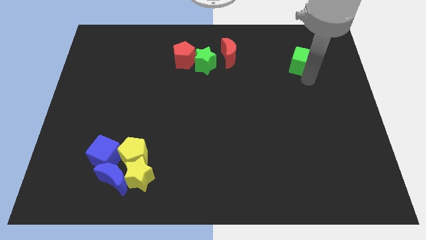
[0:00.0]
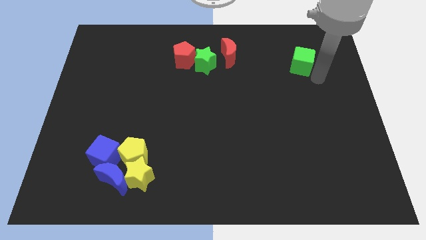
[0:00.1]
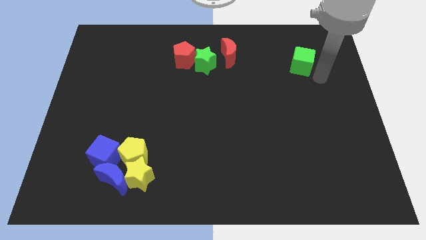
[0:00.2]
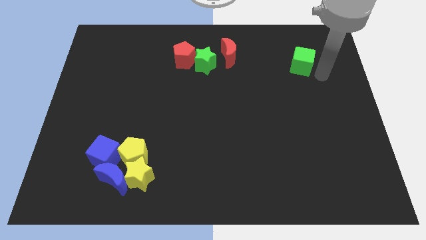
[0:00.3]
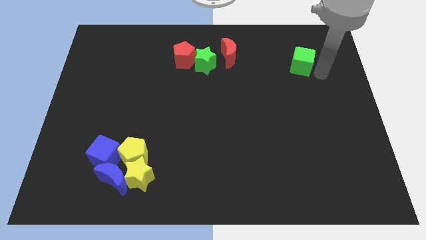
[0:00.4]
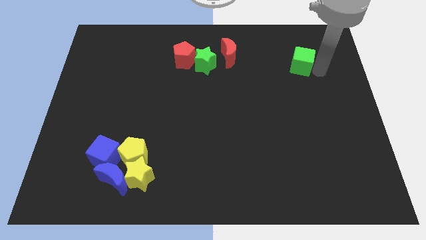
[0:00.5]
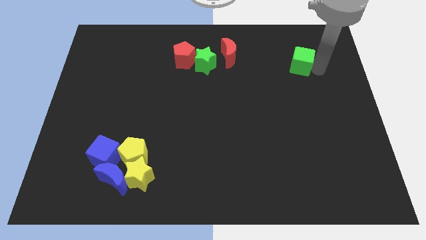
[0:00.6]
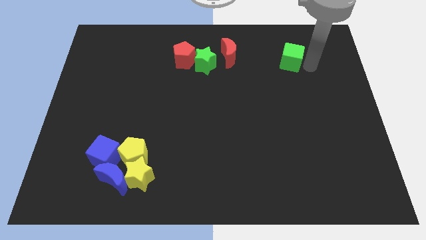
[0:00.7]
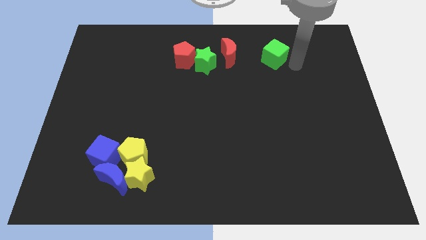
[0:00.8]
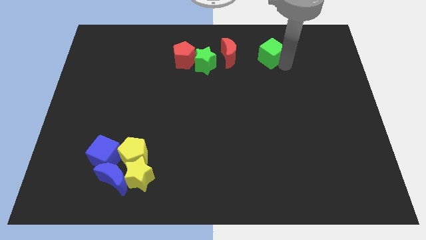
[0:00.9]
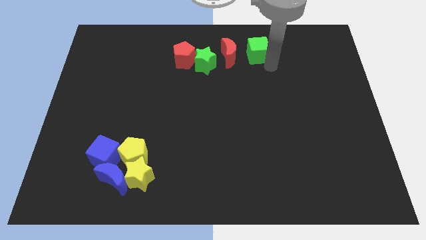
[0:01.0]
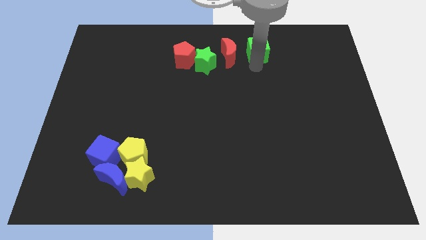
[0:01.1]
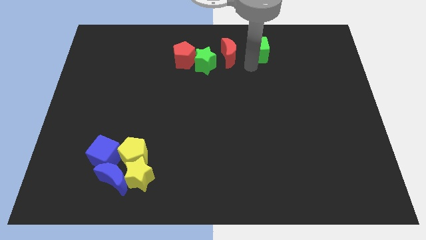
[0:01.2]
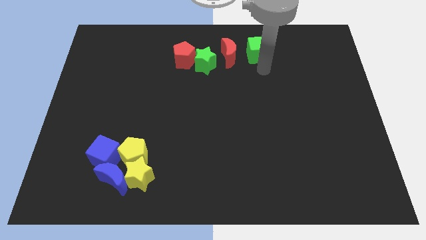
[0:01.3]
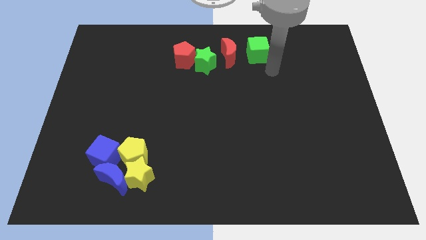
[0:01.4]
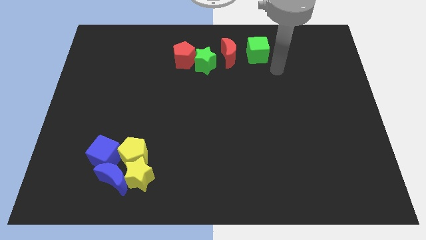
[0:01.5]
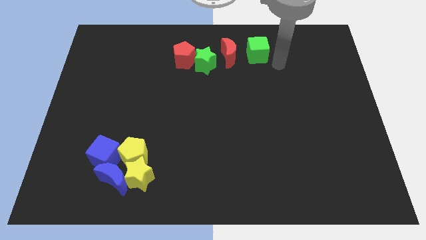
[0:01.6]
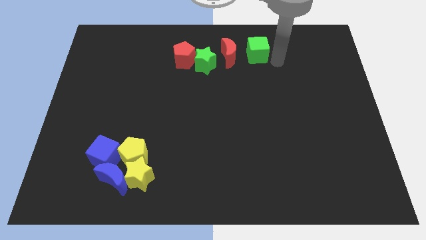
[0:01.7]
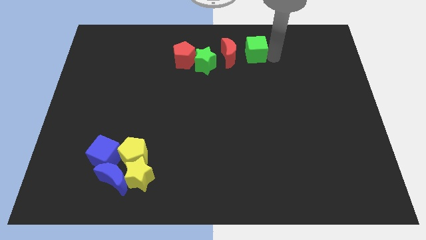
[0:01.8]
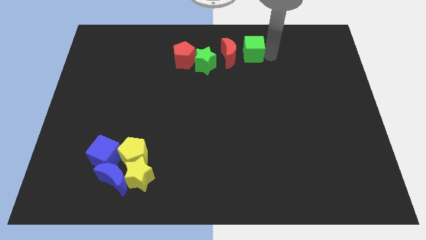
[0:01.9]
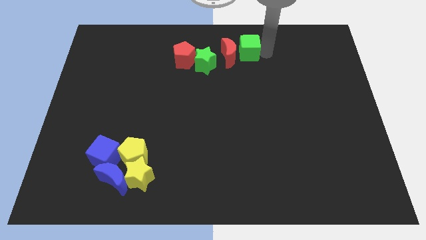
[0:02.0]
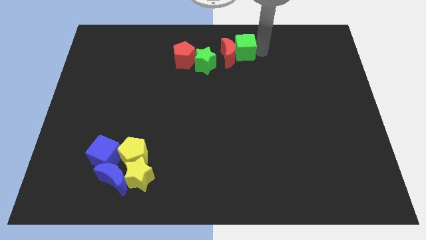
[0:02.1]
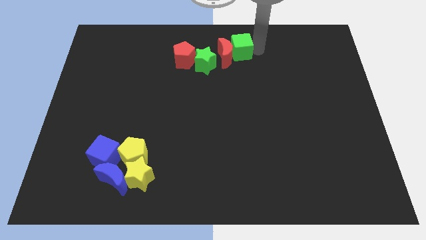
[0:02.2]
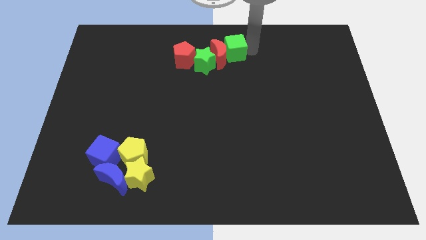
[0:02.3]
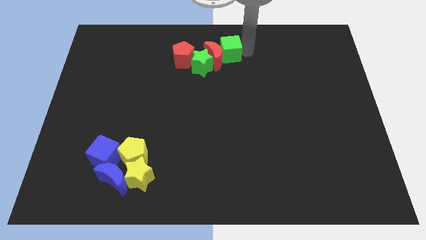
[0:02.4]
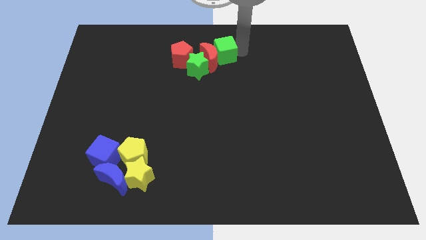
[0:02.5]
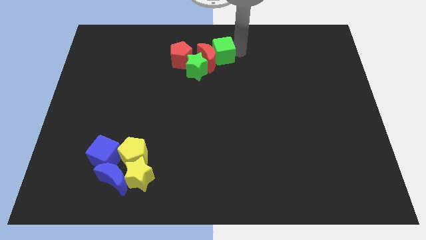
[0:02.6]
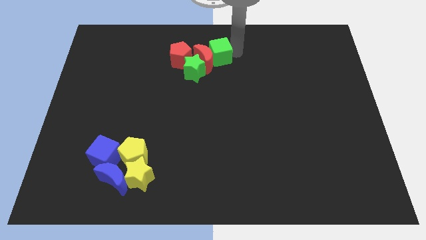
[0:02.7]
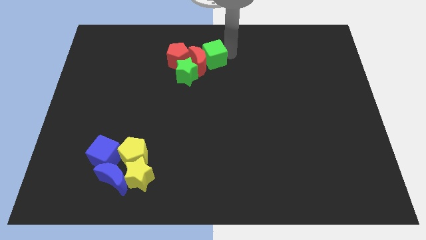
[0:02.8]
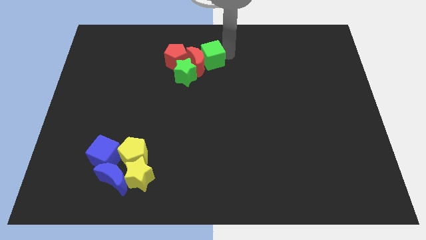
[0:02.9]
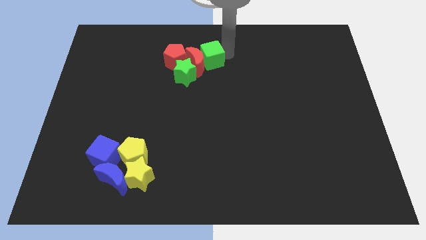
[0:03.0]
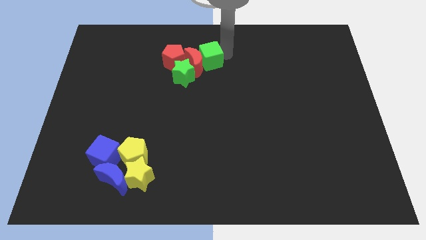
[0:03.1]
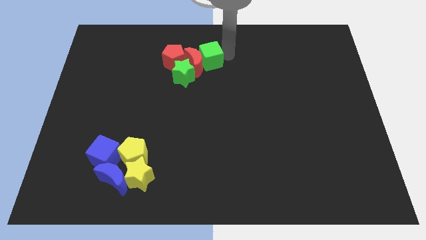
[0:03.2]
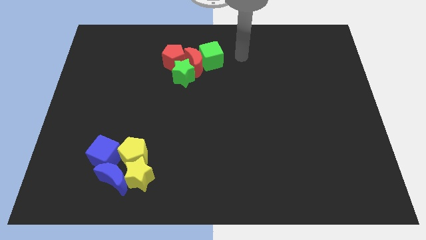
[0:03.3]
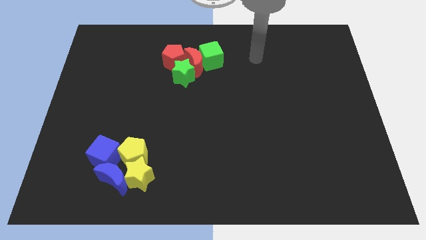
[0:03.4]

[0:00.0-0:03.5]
place the red and green blocks together at the top center of the board

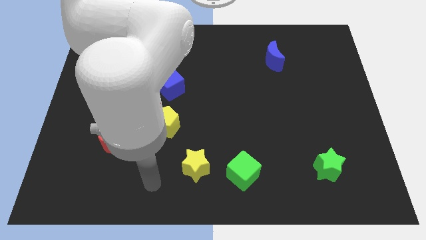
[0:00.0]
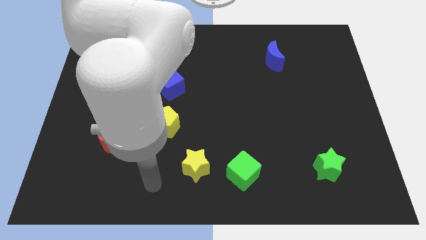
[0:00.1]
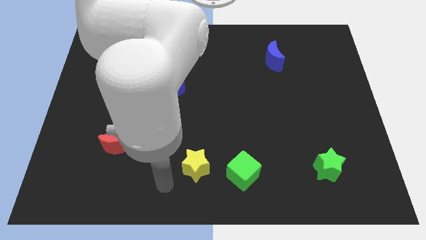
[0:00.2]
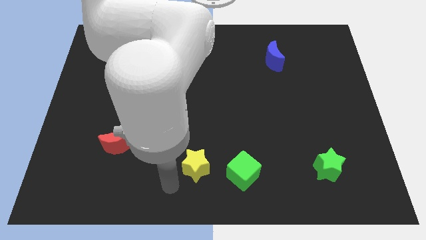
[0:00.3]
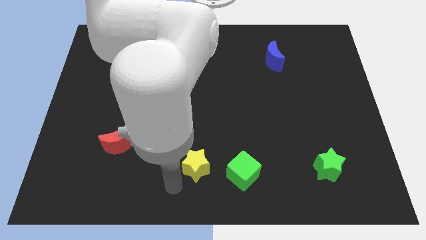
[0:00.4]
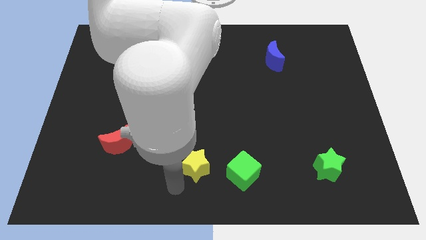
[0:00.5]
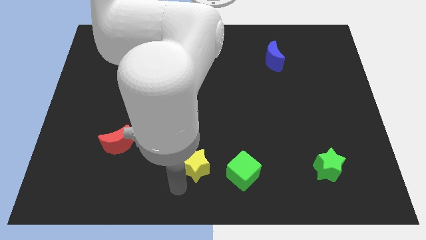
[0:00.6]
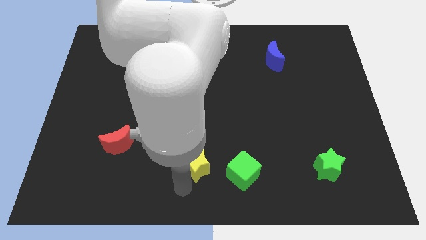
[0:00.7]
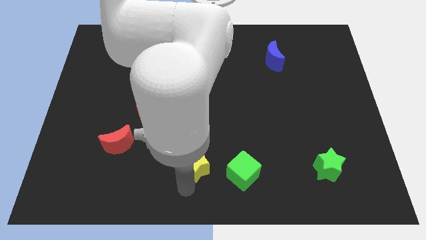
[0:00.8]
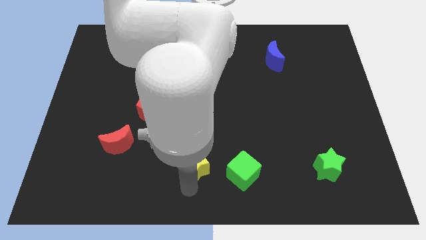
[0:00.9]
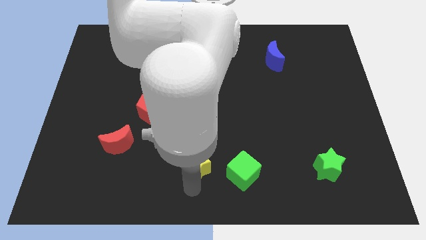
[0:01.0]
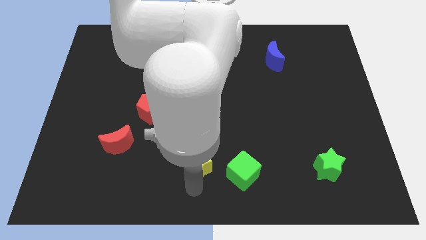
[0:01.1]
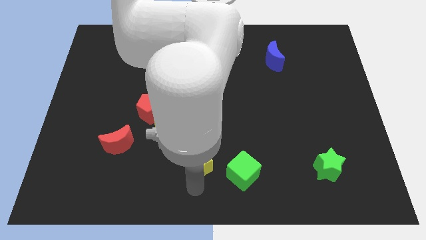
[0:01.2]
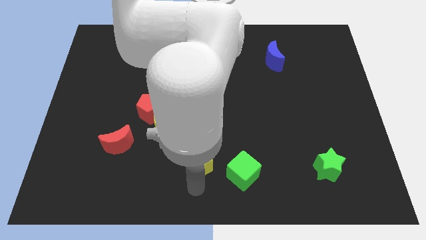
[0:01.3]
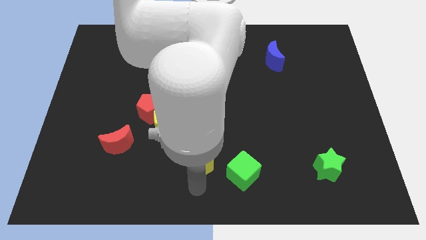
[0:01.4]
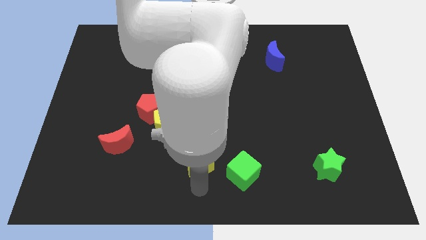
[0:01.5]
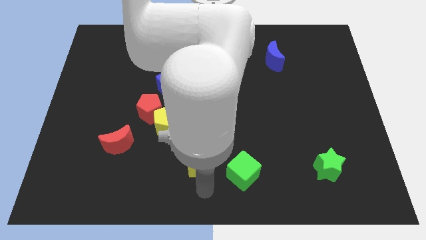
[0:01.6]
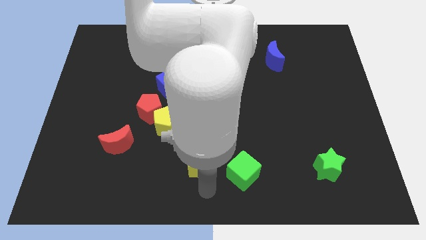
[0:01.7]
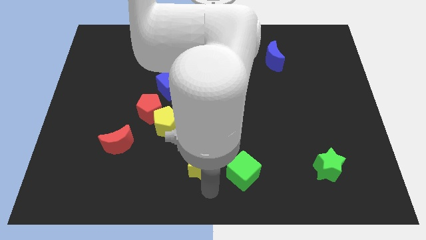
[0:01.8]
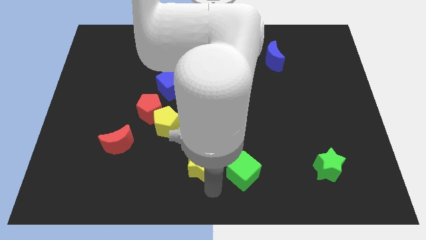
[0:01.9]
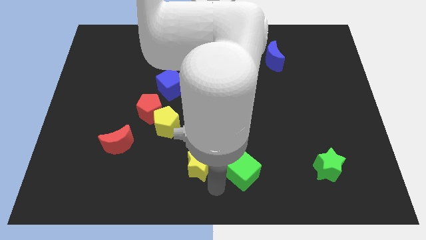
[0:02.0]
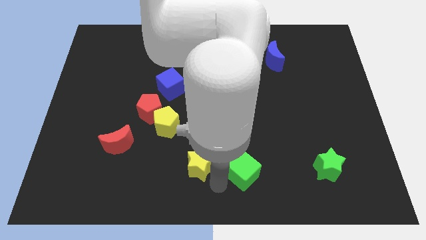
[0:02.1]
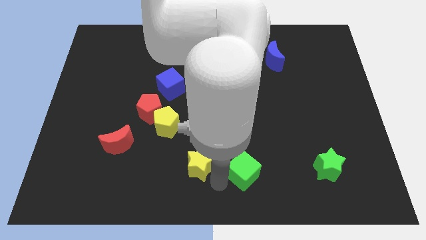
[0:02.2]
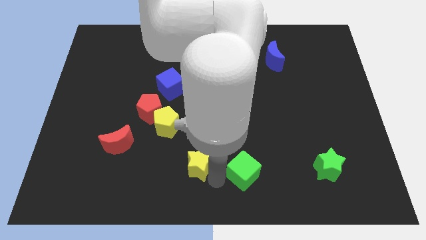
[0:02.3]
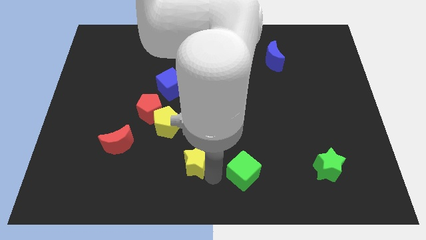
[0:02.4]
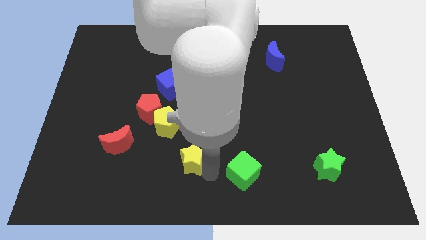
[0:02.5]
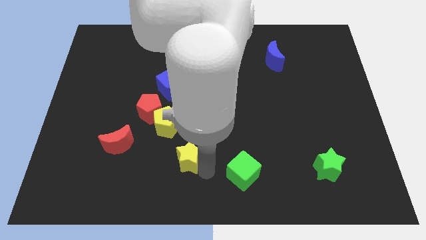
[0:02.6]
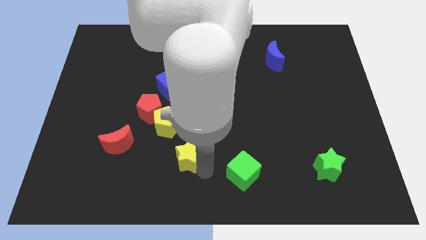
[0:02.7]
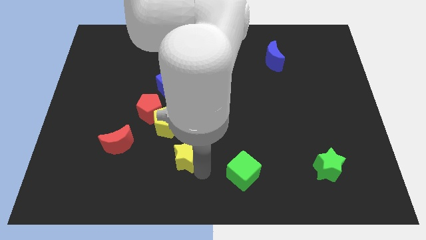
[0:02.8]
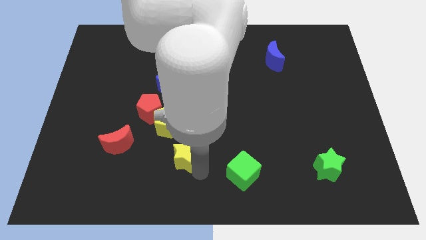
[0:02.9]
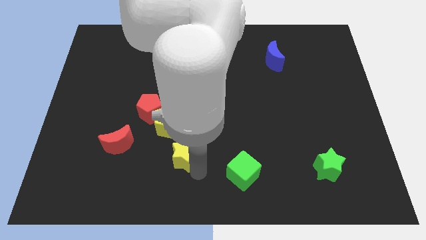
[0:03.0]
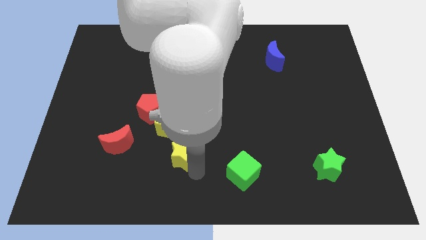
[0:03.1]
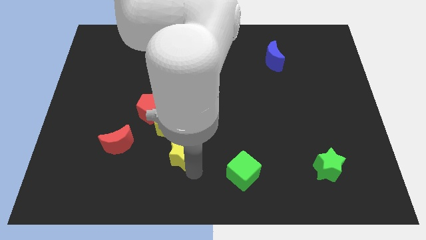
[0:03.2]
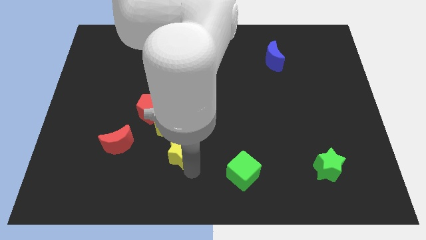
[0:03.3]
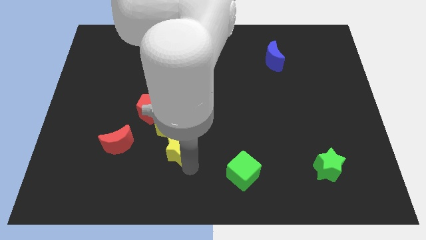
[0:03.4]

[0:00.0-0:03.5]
move the yellow star to the bottom of the yellow pentagon

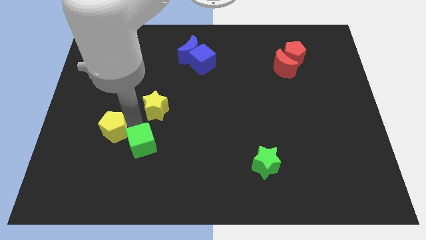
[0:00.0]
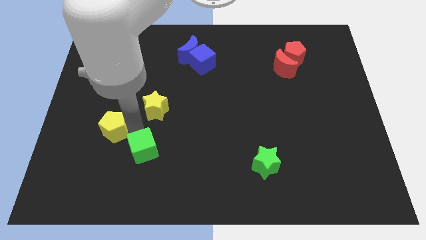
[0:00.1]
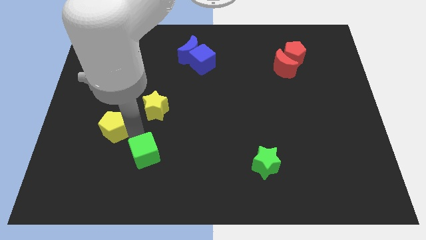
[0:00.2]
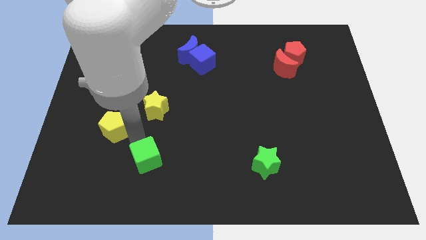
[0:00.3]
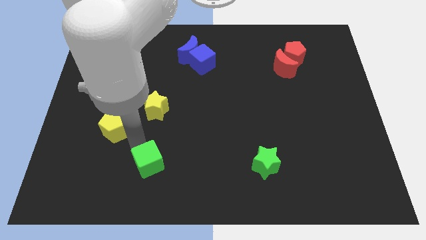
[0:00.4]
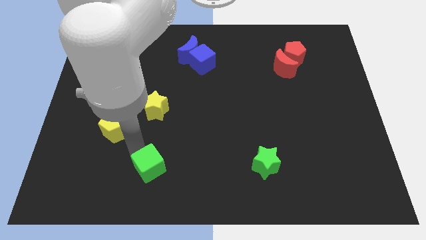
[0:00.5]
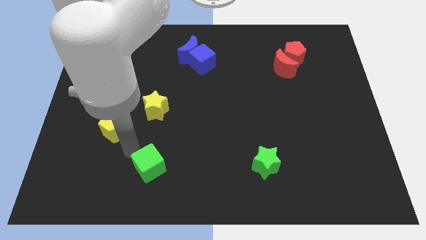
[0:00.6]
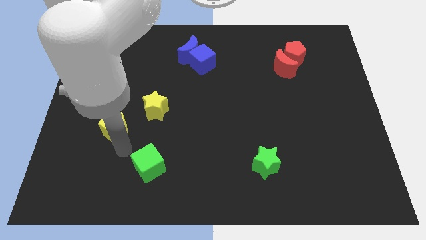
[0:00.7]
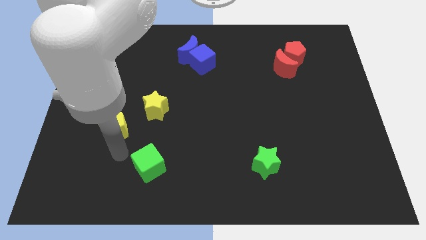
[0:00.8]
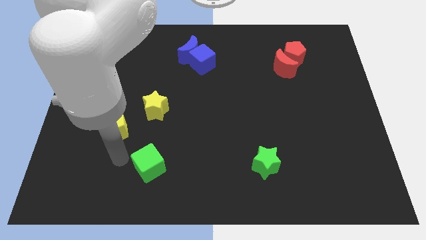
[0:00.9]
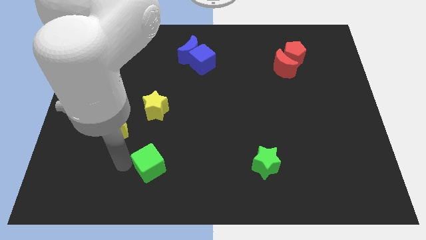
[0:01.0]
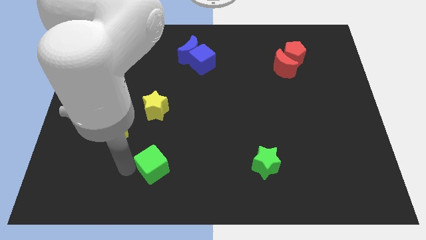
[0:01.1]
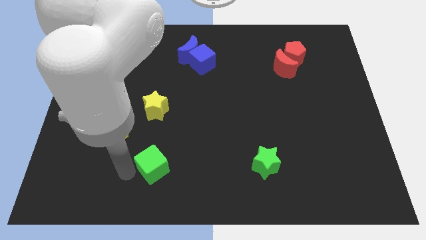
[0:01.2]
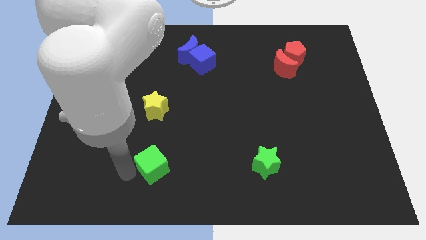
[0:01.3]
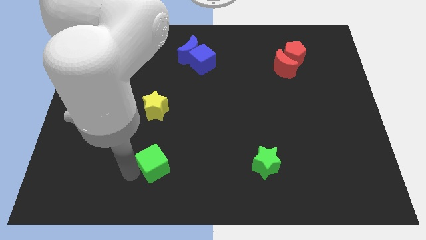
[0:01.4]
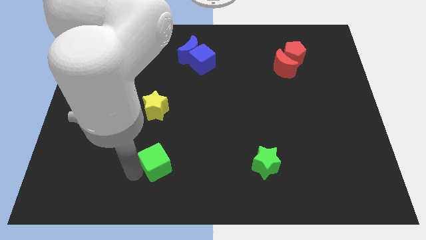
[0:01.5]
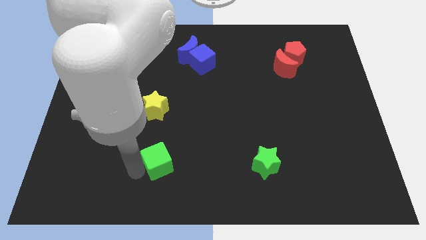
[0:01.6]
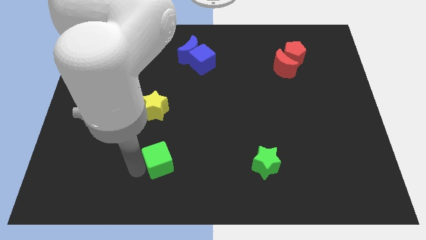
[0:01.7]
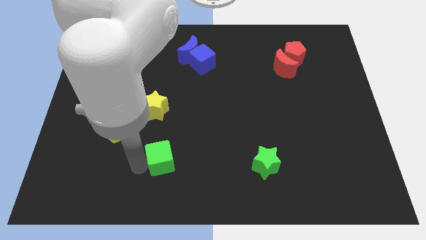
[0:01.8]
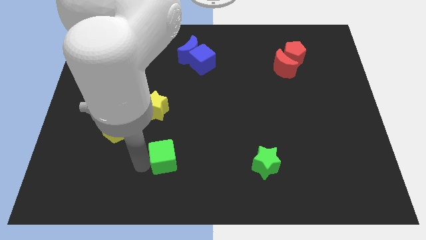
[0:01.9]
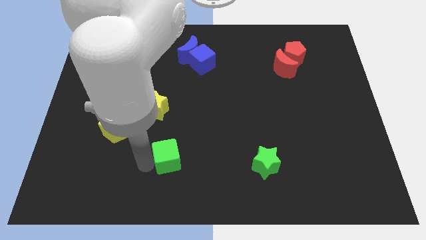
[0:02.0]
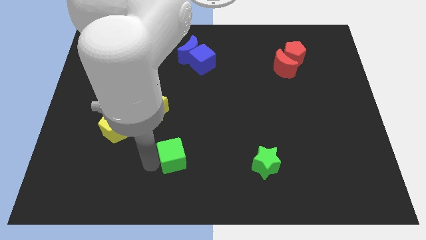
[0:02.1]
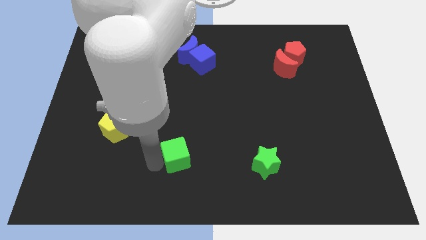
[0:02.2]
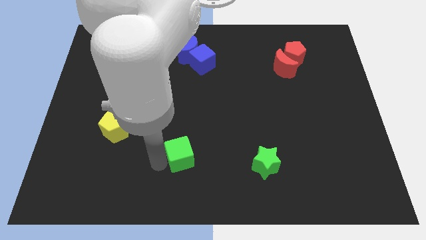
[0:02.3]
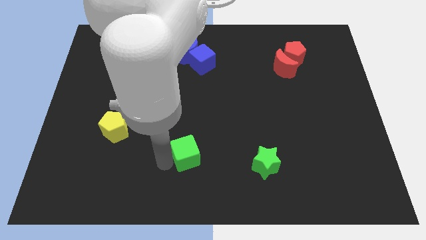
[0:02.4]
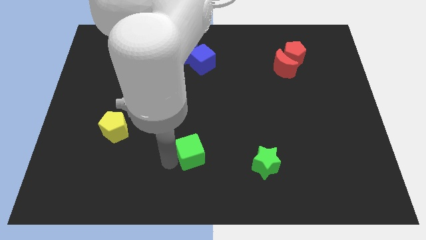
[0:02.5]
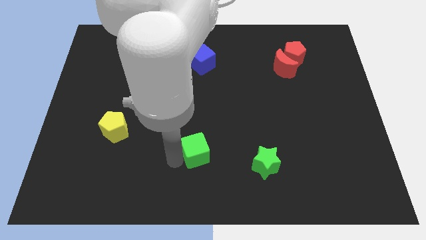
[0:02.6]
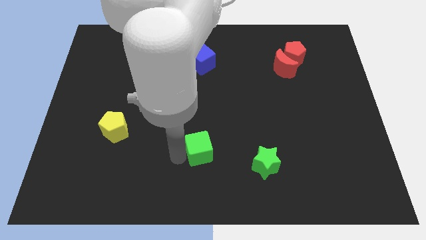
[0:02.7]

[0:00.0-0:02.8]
place the green cube in between the green star and yellow pentagon
